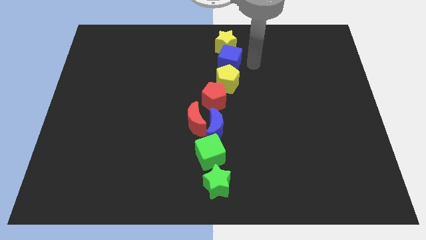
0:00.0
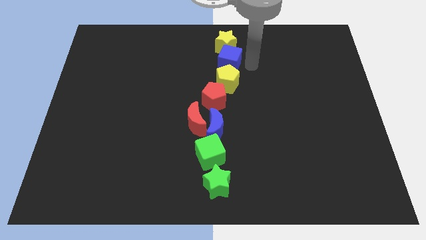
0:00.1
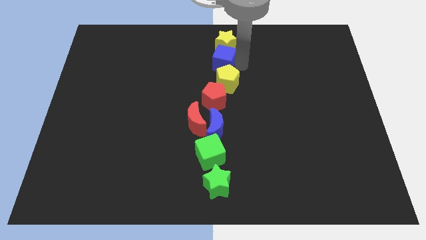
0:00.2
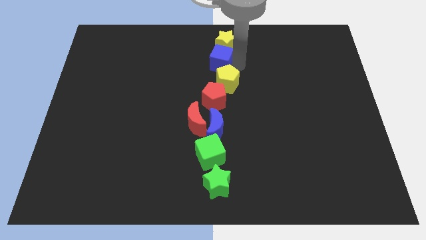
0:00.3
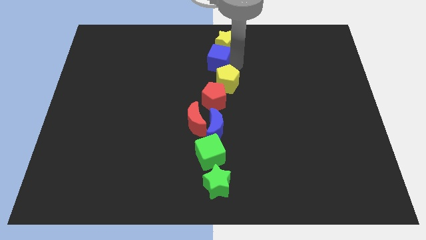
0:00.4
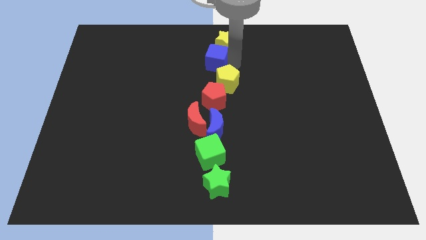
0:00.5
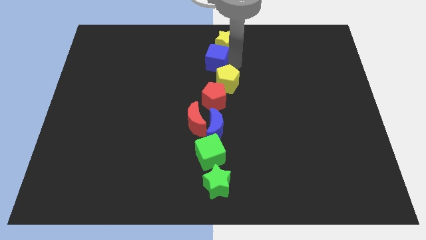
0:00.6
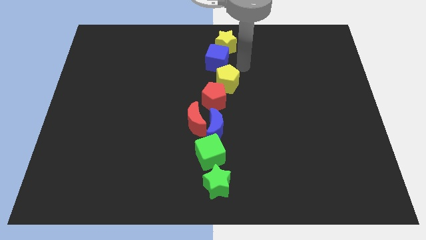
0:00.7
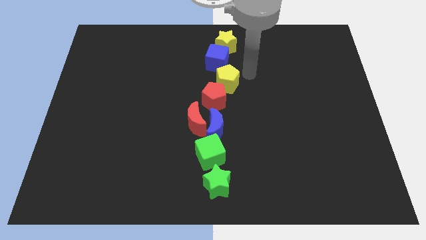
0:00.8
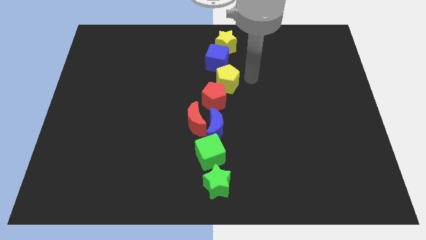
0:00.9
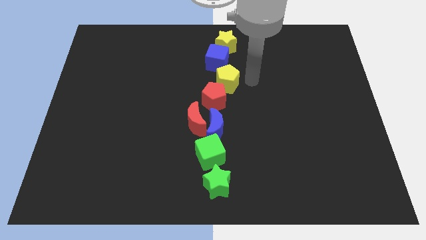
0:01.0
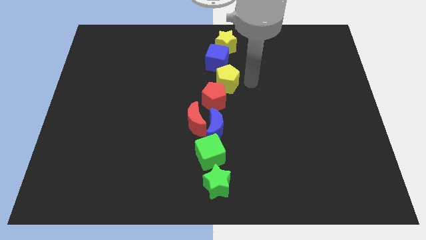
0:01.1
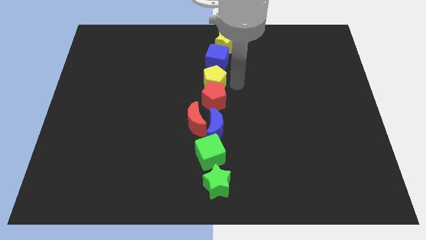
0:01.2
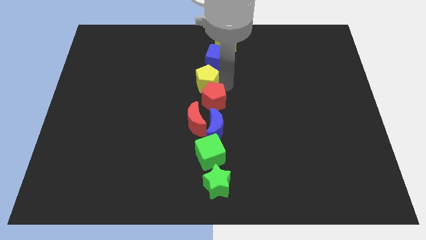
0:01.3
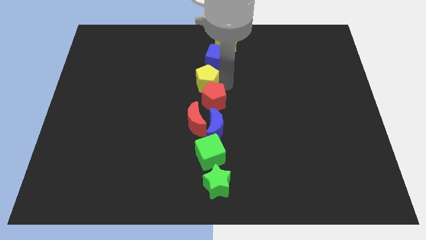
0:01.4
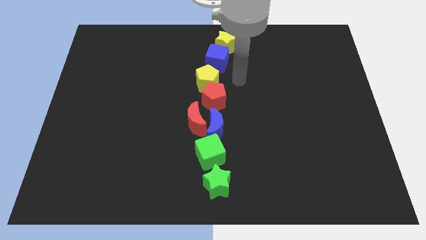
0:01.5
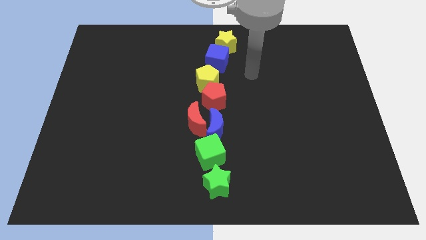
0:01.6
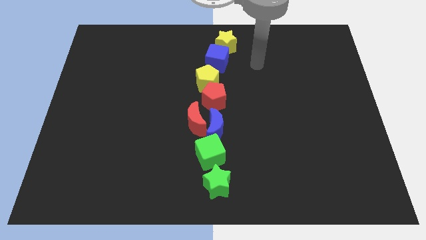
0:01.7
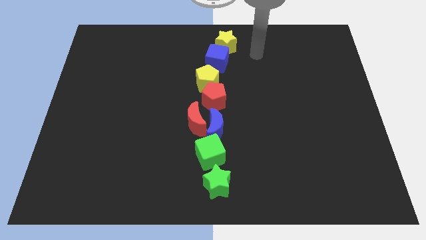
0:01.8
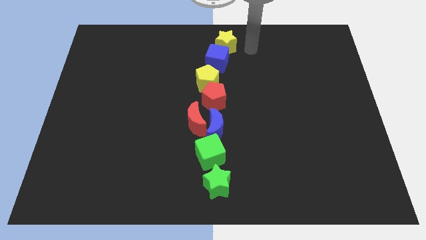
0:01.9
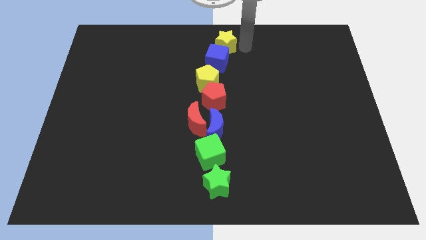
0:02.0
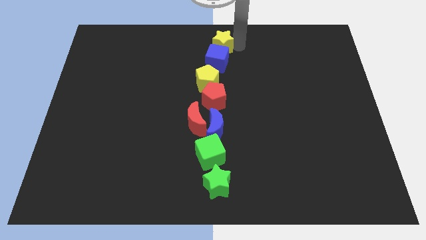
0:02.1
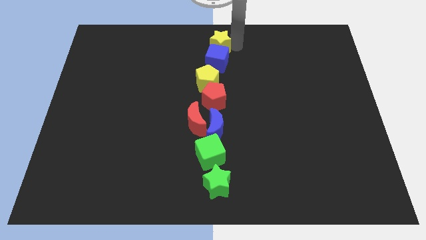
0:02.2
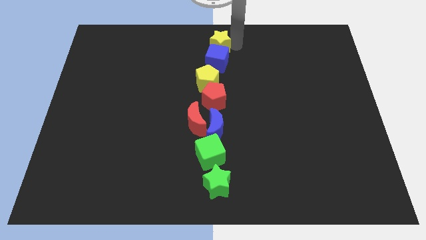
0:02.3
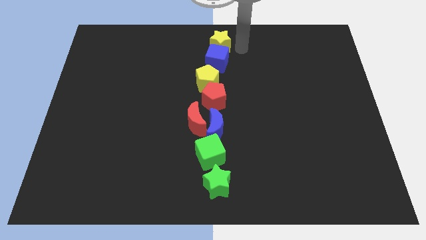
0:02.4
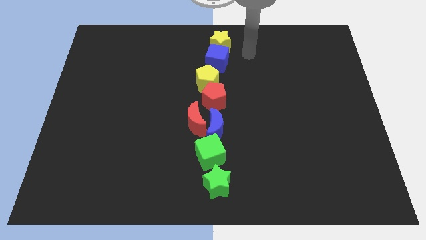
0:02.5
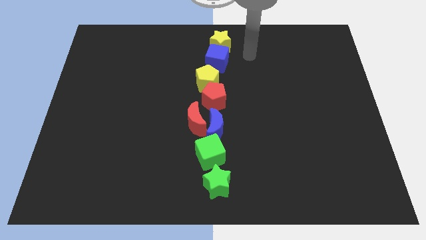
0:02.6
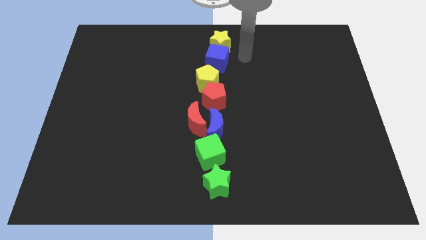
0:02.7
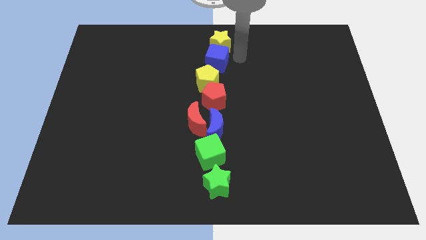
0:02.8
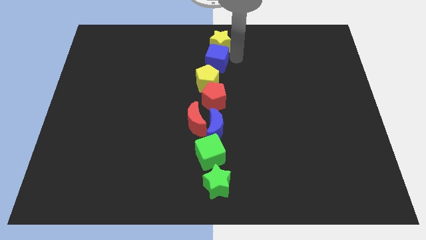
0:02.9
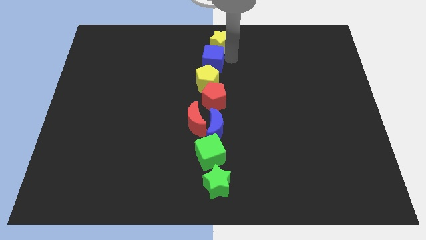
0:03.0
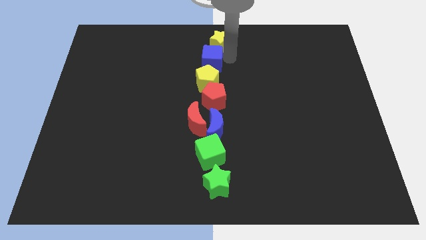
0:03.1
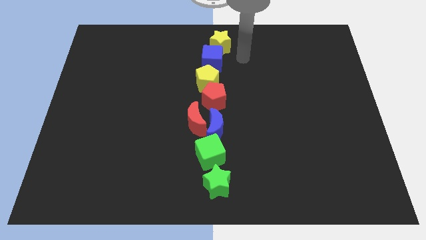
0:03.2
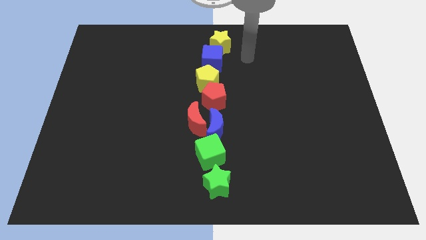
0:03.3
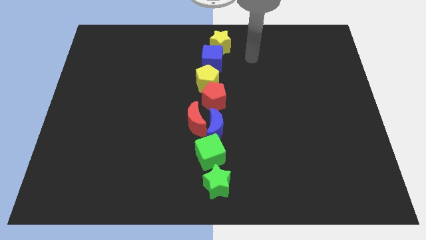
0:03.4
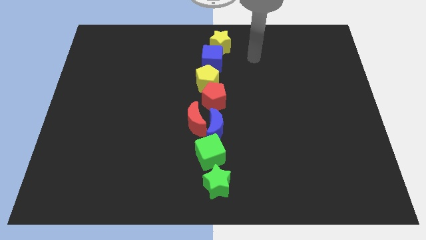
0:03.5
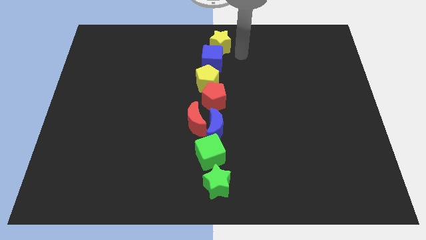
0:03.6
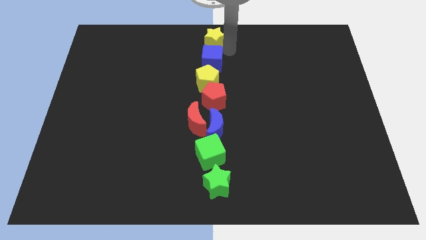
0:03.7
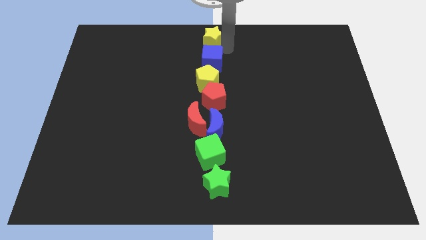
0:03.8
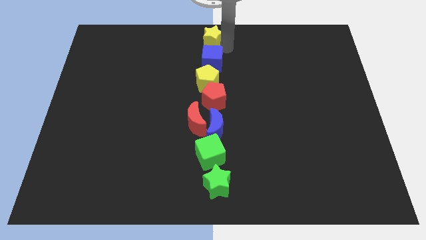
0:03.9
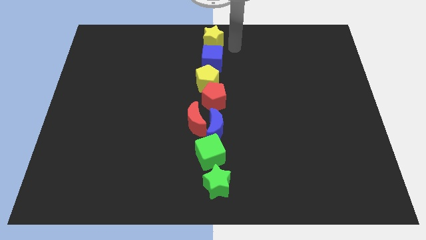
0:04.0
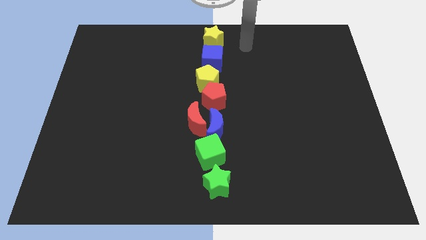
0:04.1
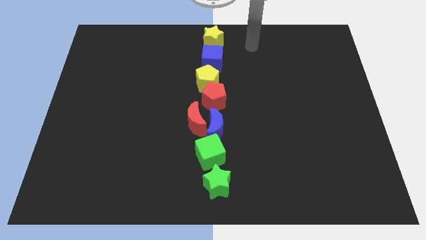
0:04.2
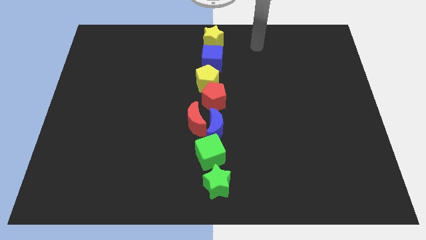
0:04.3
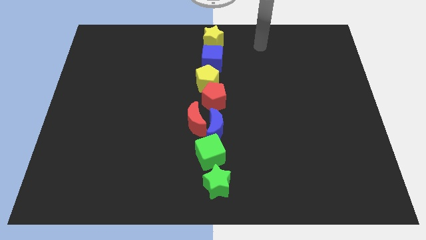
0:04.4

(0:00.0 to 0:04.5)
move slightly the blue cube yellow star and yellow pentagon to the left side side

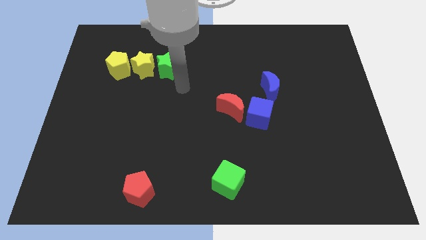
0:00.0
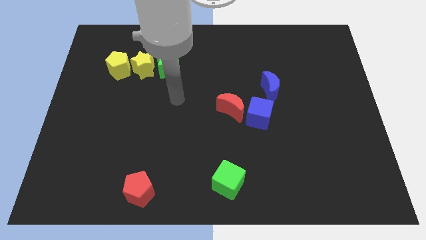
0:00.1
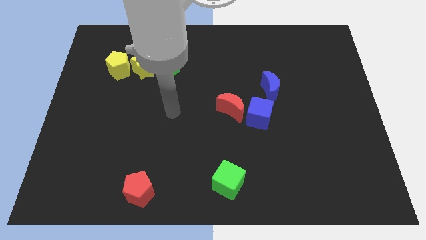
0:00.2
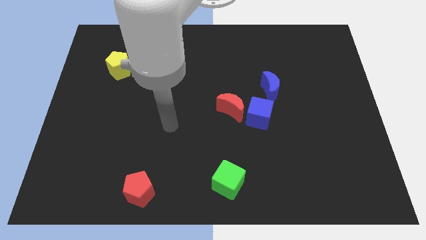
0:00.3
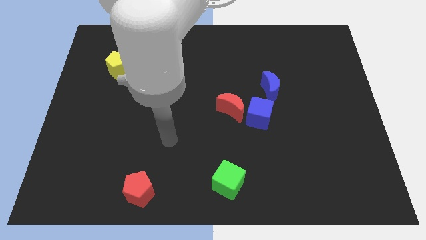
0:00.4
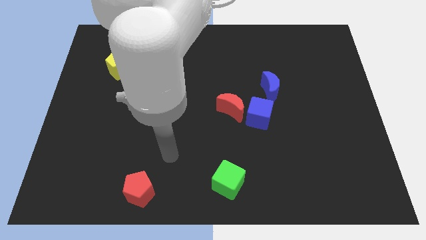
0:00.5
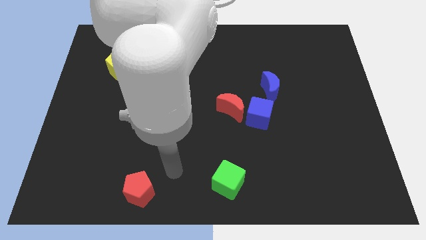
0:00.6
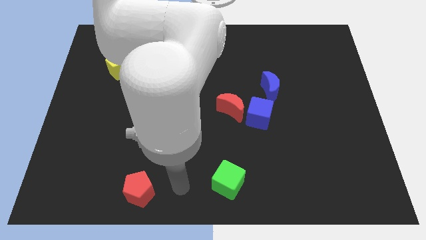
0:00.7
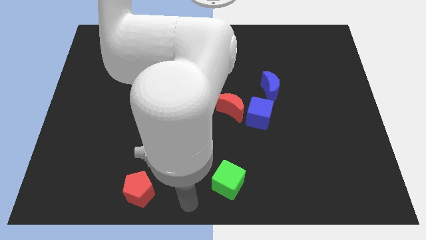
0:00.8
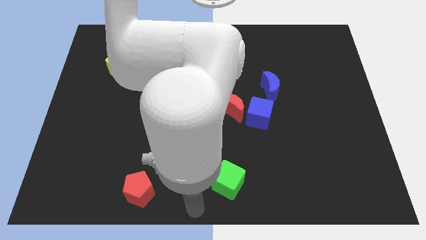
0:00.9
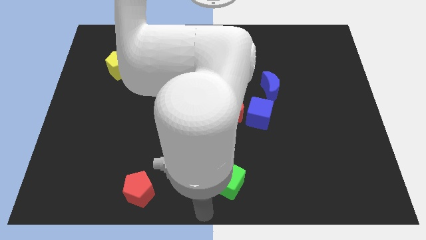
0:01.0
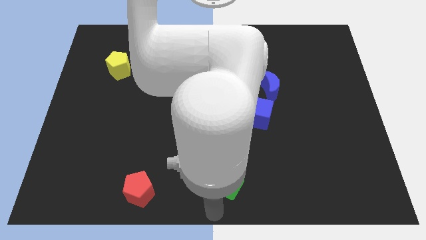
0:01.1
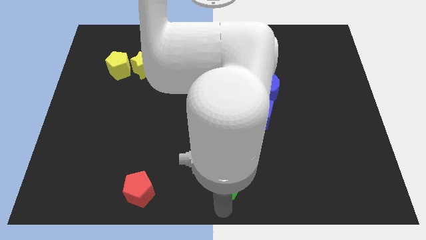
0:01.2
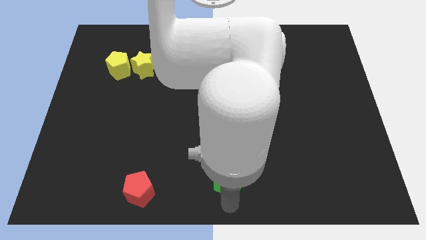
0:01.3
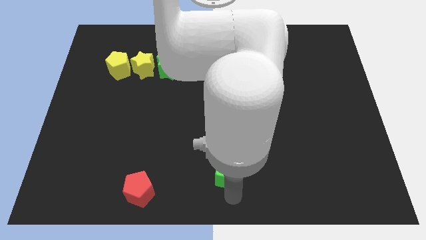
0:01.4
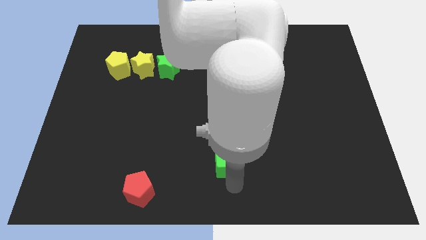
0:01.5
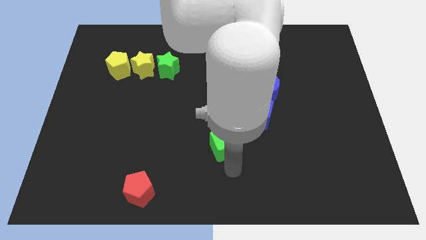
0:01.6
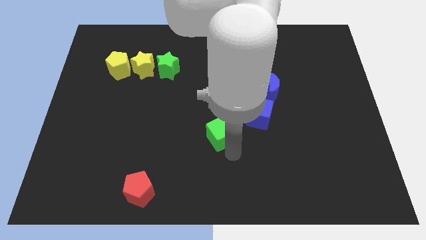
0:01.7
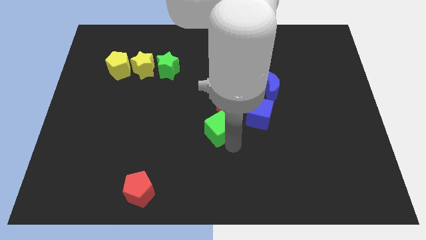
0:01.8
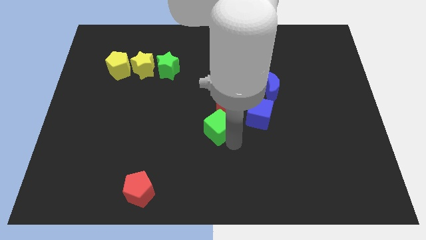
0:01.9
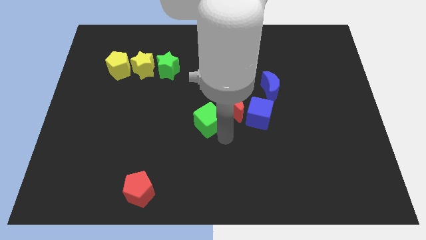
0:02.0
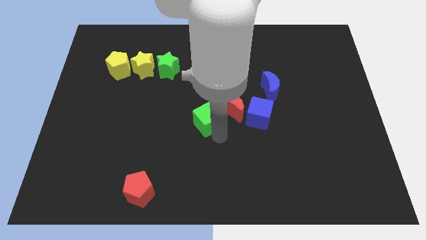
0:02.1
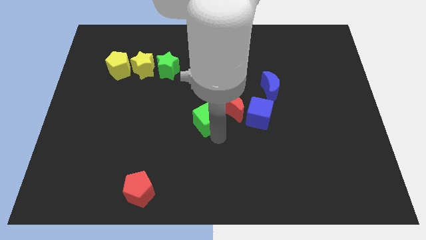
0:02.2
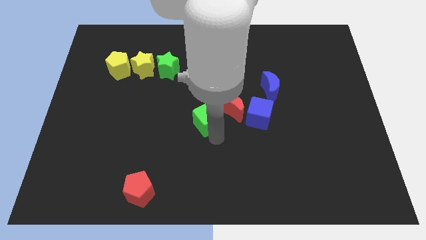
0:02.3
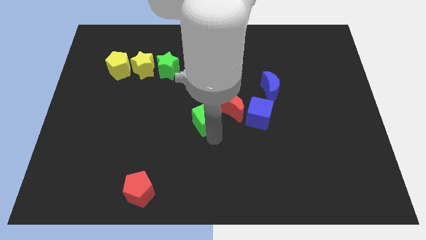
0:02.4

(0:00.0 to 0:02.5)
move the green cube to the center of the board

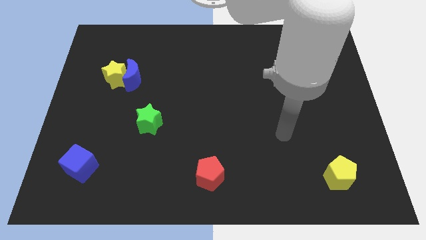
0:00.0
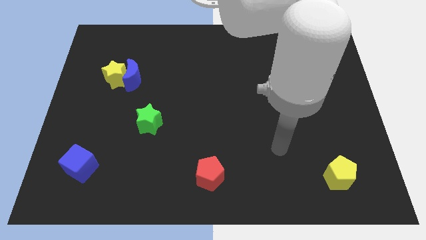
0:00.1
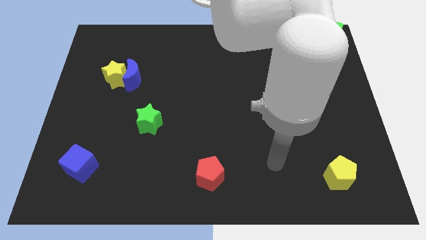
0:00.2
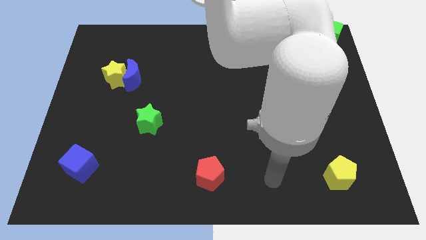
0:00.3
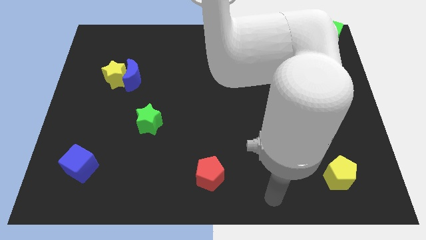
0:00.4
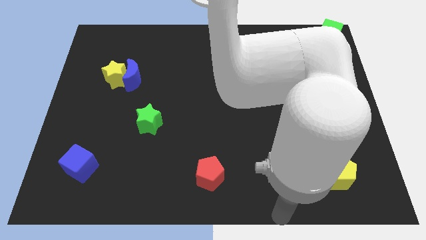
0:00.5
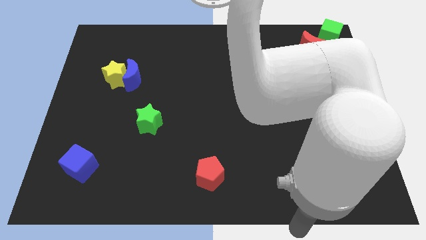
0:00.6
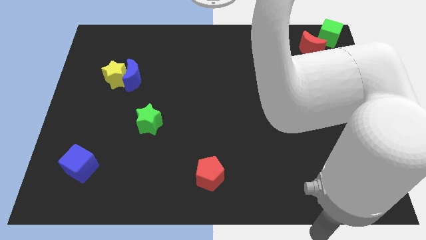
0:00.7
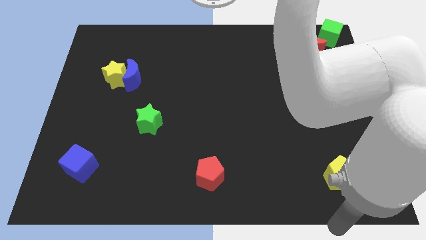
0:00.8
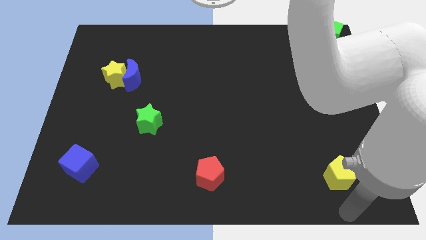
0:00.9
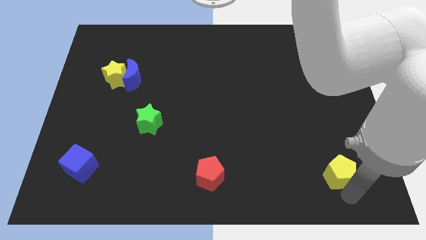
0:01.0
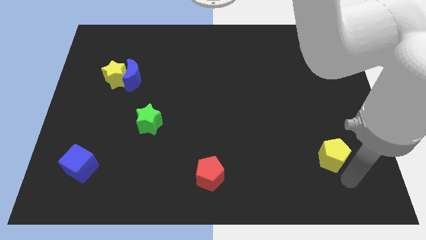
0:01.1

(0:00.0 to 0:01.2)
point your arm at the bottom of yellow pentagon

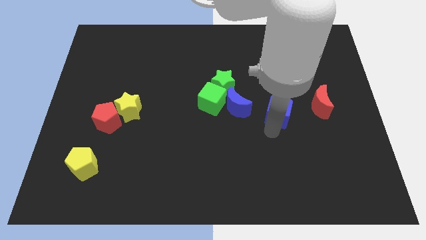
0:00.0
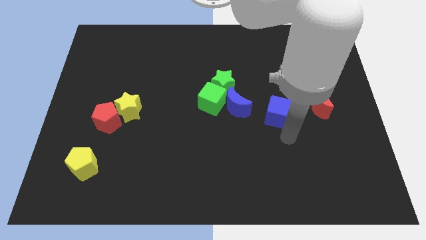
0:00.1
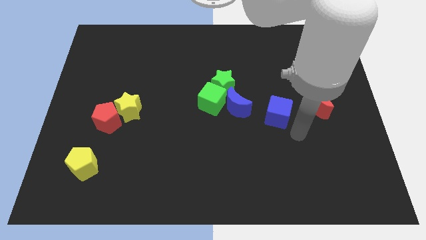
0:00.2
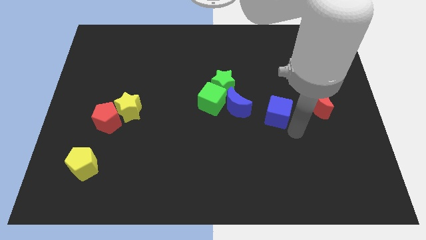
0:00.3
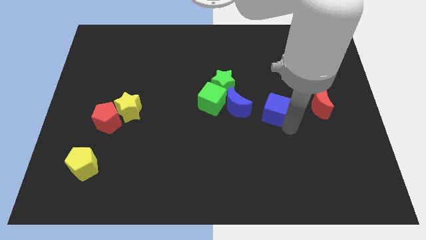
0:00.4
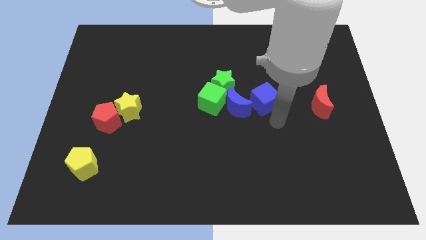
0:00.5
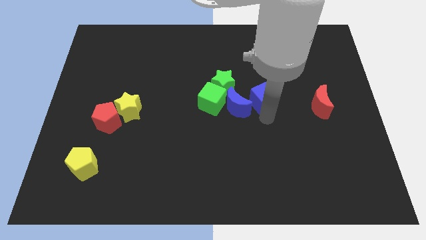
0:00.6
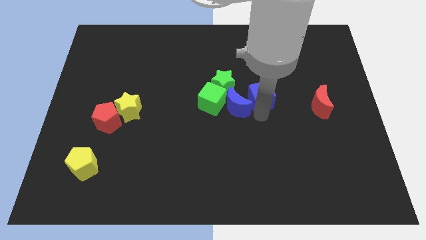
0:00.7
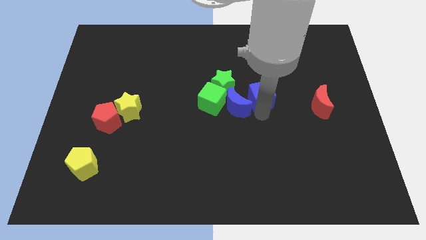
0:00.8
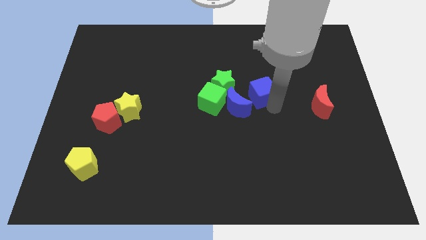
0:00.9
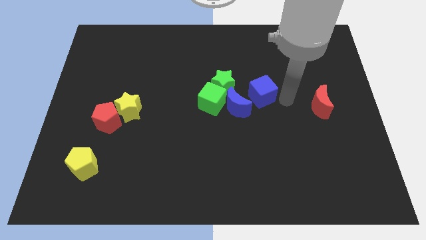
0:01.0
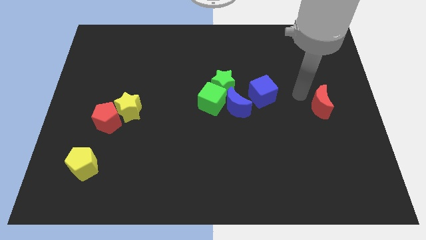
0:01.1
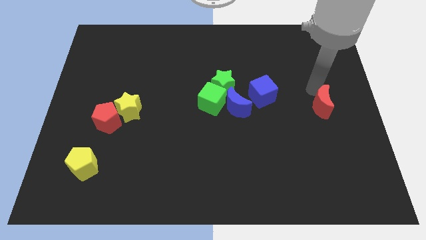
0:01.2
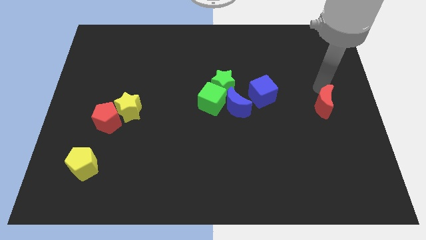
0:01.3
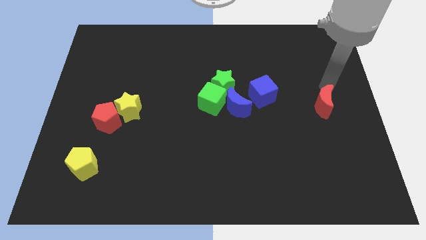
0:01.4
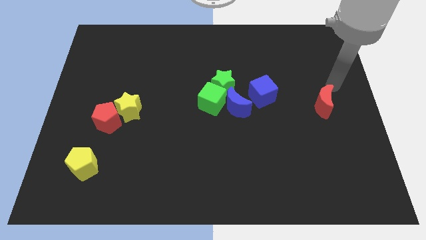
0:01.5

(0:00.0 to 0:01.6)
move the blue cube above the blue moon
